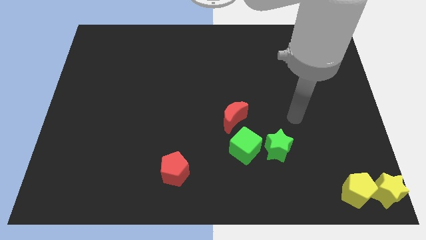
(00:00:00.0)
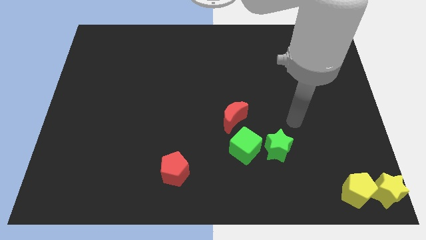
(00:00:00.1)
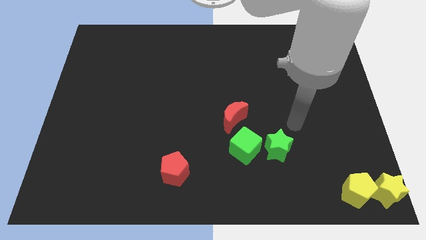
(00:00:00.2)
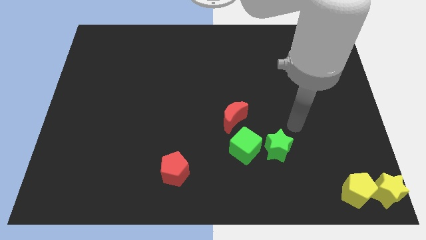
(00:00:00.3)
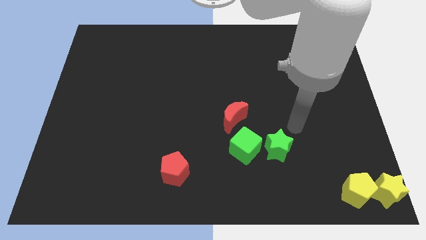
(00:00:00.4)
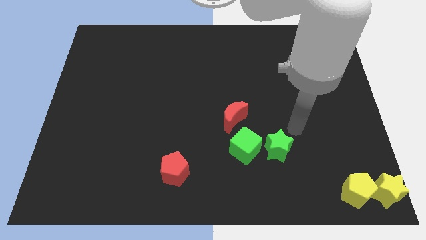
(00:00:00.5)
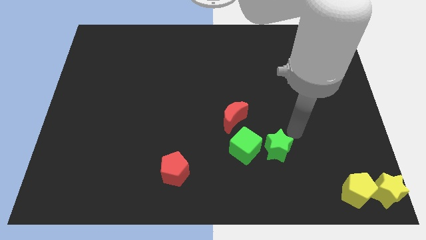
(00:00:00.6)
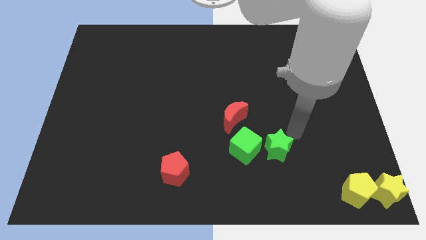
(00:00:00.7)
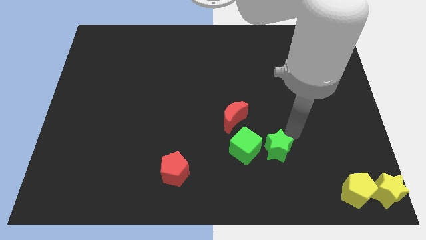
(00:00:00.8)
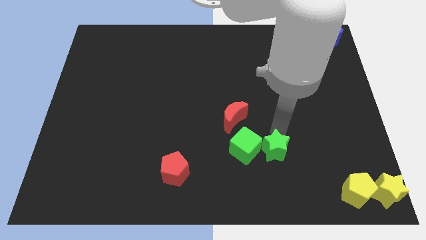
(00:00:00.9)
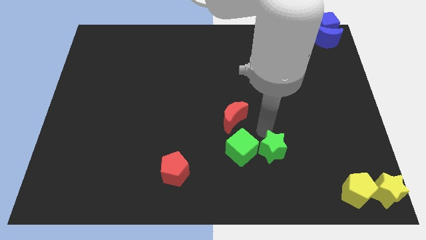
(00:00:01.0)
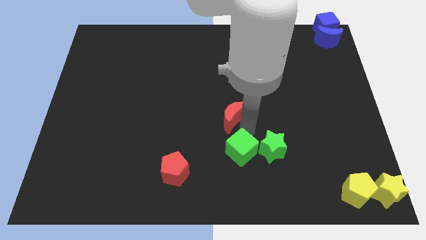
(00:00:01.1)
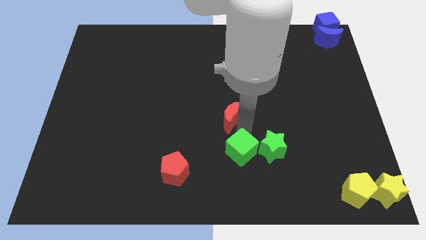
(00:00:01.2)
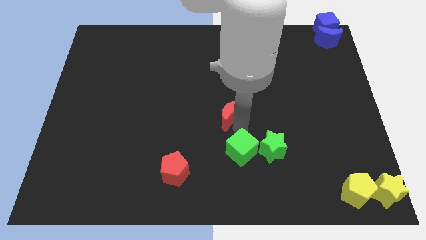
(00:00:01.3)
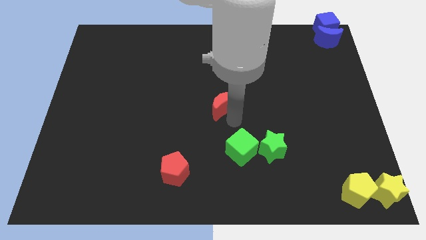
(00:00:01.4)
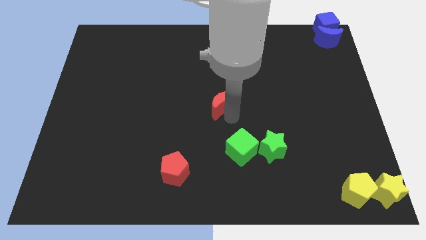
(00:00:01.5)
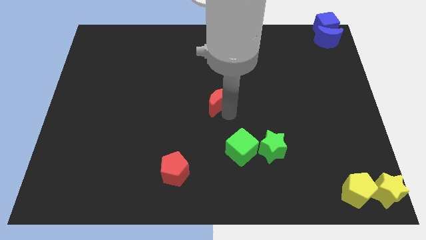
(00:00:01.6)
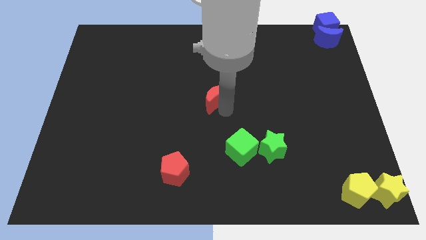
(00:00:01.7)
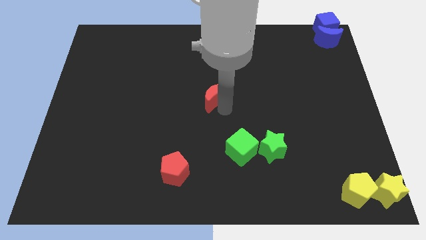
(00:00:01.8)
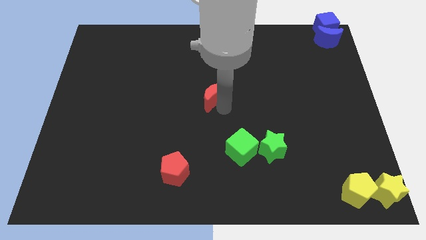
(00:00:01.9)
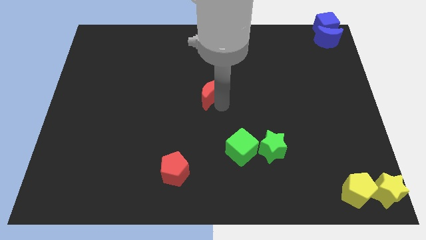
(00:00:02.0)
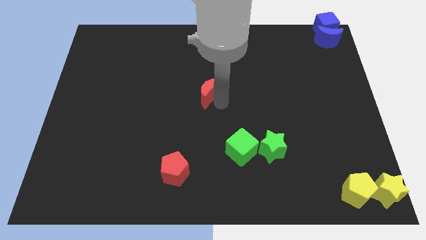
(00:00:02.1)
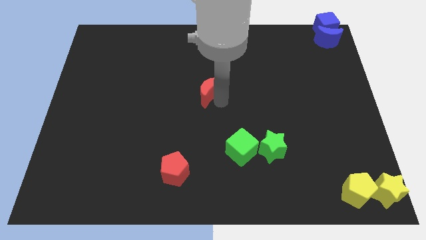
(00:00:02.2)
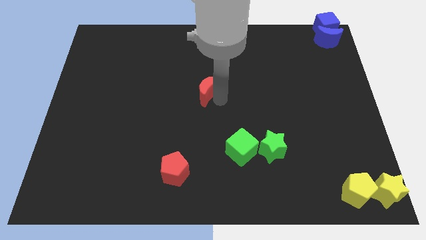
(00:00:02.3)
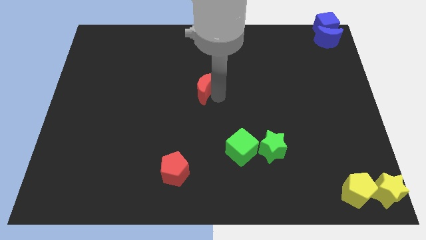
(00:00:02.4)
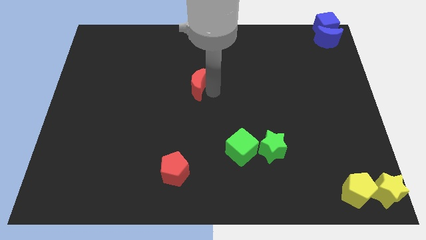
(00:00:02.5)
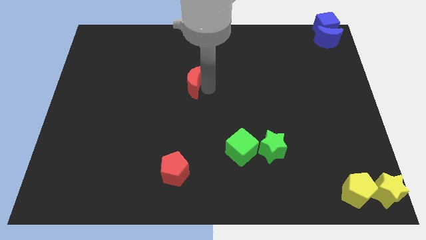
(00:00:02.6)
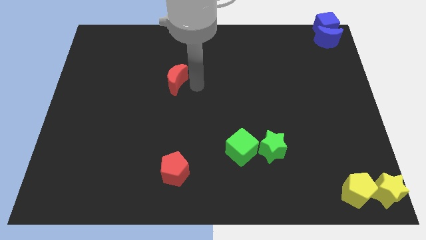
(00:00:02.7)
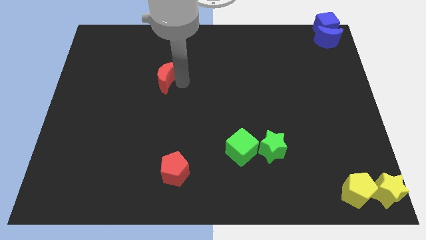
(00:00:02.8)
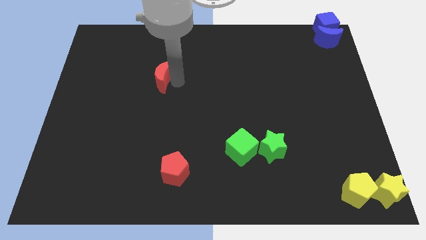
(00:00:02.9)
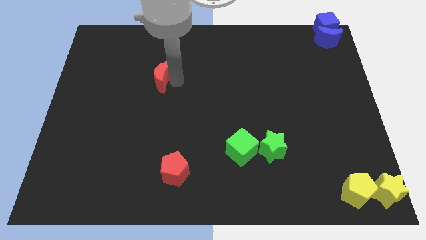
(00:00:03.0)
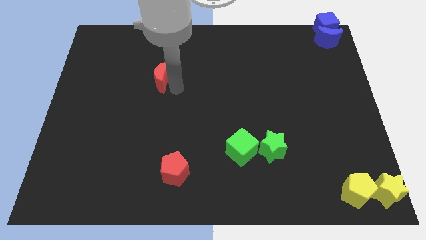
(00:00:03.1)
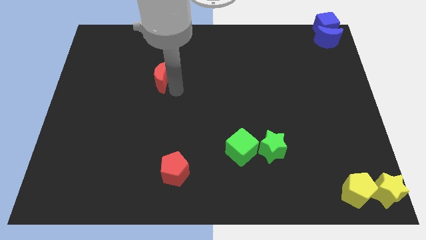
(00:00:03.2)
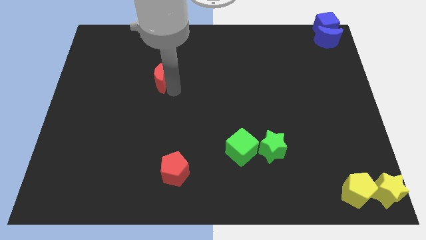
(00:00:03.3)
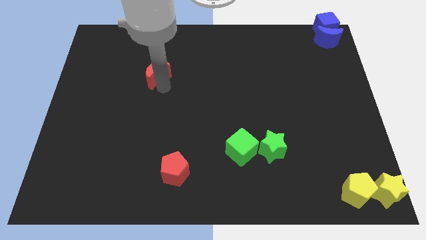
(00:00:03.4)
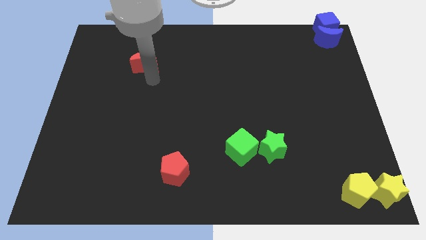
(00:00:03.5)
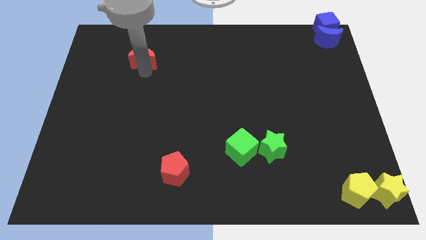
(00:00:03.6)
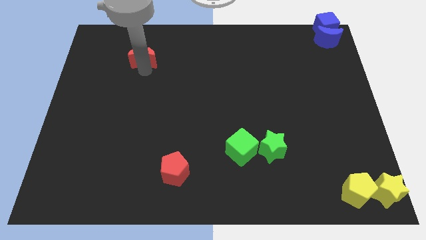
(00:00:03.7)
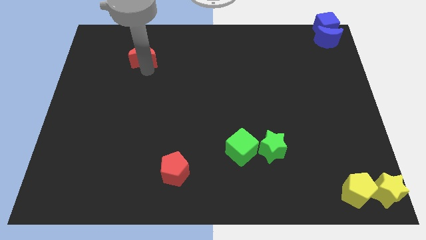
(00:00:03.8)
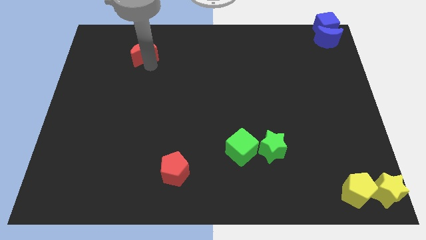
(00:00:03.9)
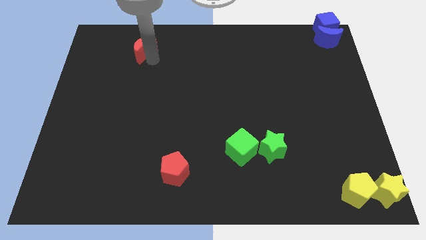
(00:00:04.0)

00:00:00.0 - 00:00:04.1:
move the red crescent slightly towards the top of the board

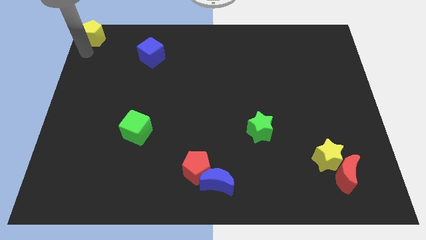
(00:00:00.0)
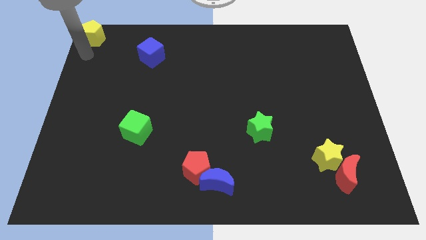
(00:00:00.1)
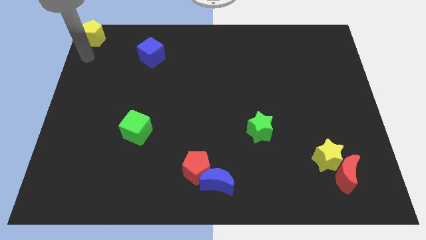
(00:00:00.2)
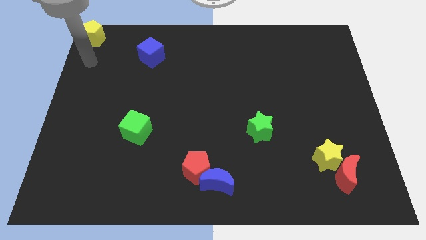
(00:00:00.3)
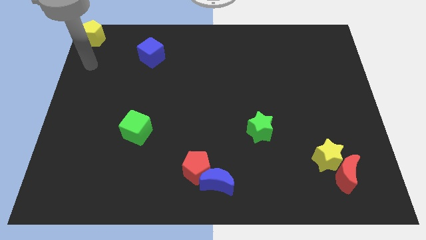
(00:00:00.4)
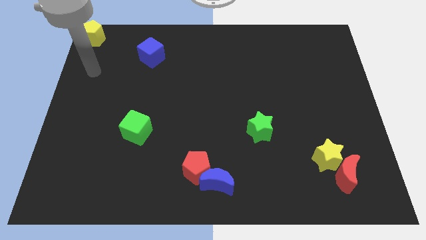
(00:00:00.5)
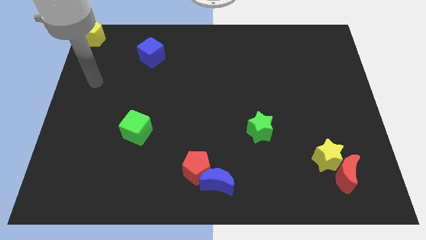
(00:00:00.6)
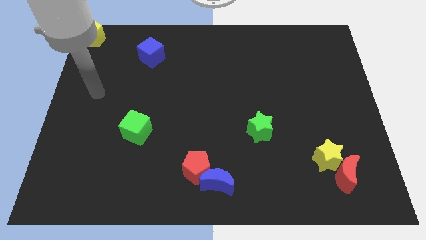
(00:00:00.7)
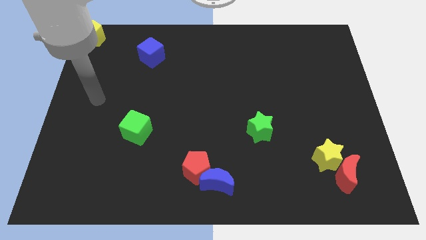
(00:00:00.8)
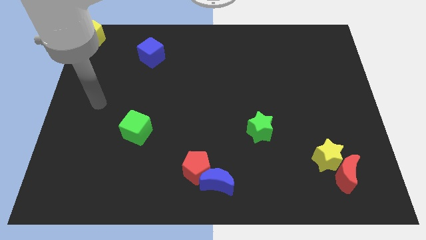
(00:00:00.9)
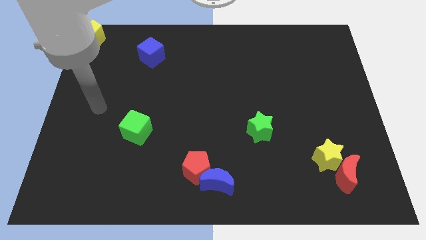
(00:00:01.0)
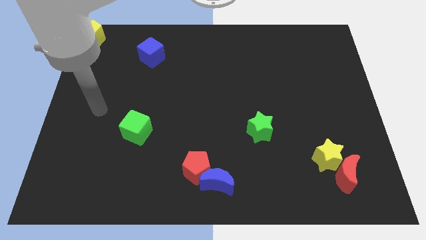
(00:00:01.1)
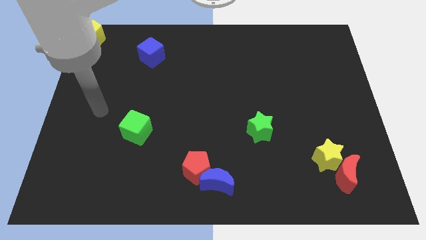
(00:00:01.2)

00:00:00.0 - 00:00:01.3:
move your arm away from yellow pentagon

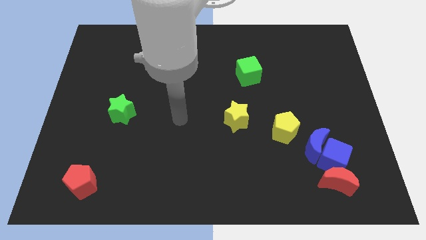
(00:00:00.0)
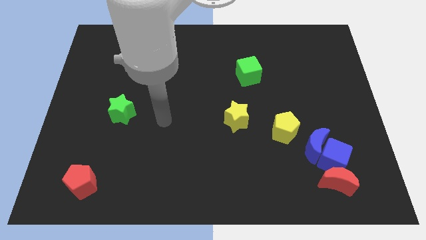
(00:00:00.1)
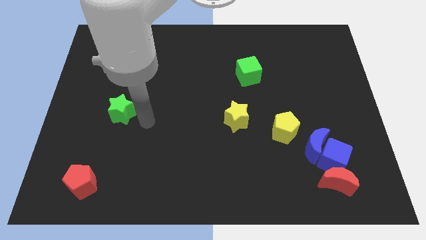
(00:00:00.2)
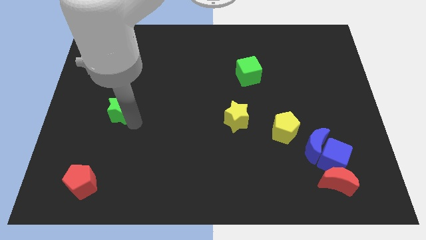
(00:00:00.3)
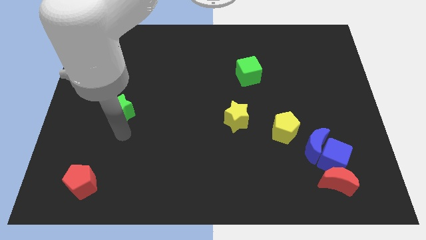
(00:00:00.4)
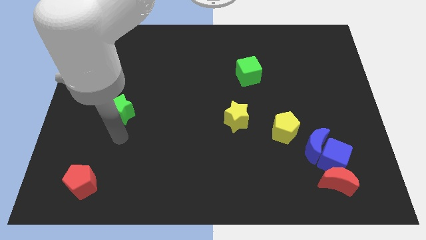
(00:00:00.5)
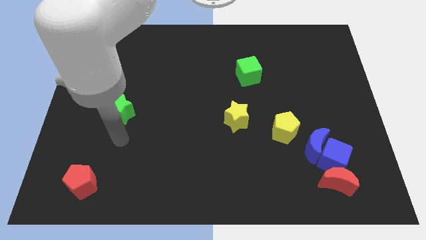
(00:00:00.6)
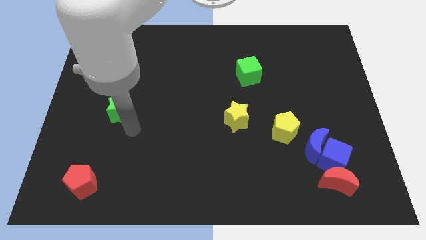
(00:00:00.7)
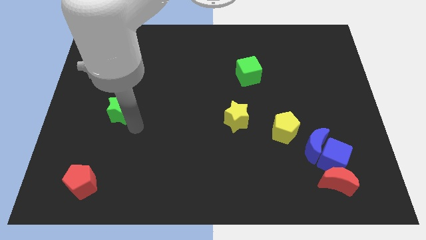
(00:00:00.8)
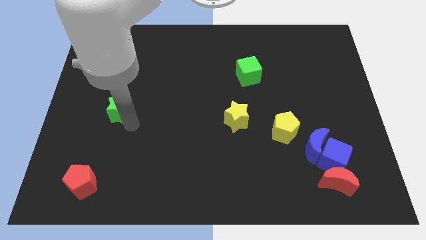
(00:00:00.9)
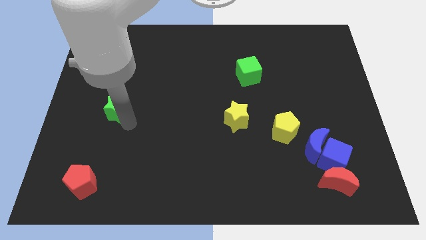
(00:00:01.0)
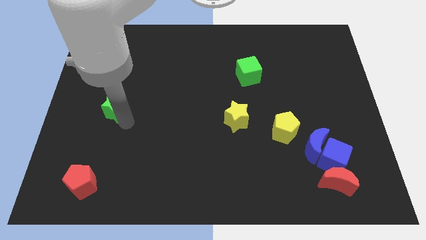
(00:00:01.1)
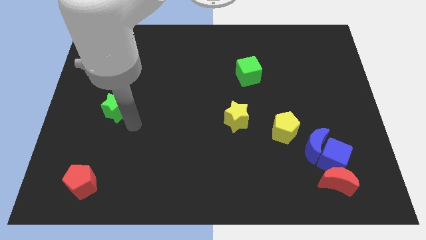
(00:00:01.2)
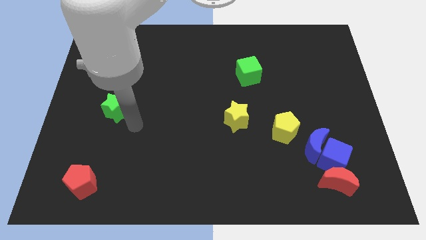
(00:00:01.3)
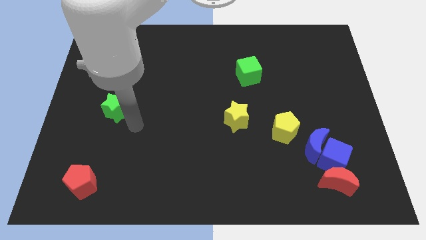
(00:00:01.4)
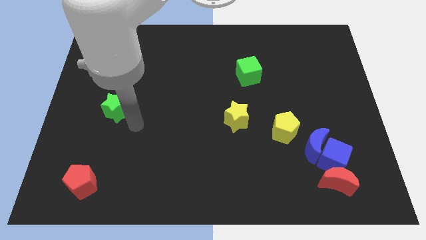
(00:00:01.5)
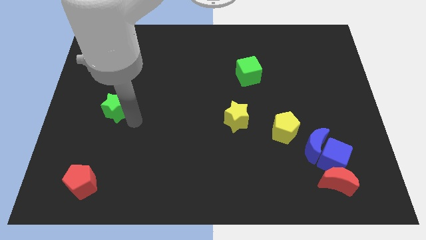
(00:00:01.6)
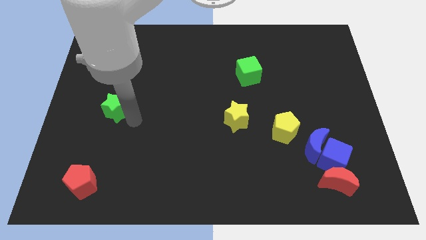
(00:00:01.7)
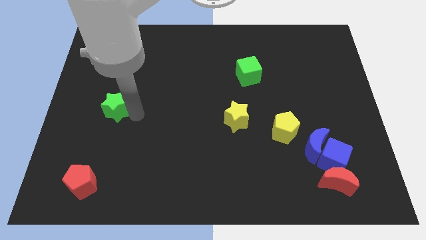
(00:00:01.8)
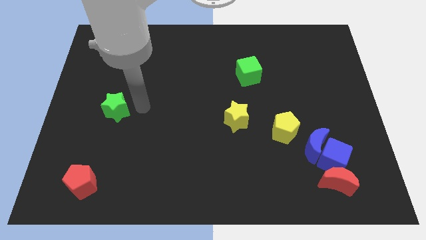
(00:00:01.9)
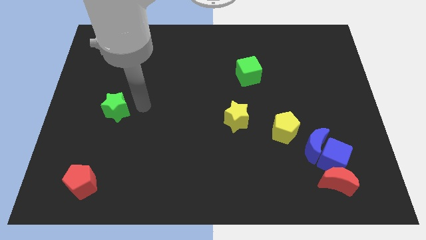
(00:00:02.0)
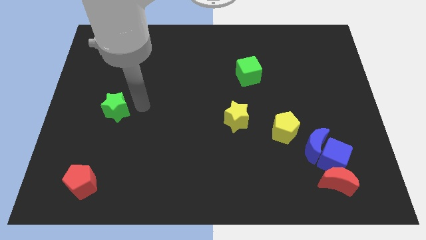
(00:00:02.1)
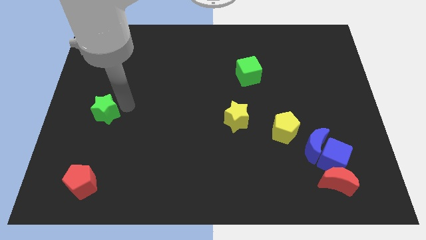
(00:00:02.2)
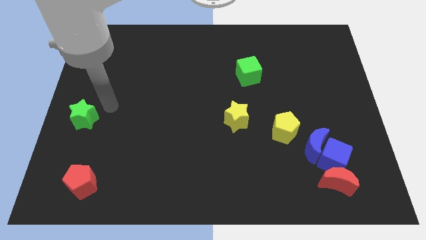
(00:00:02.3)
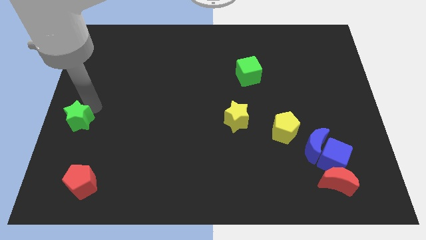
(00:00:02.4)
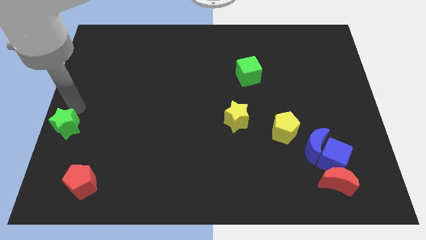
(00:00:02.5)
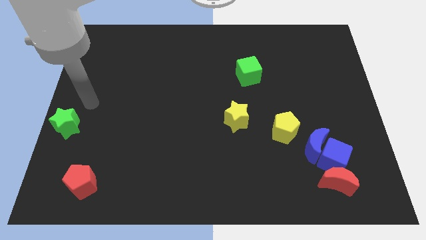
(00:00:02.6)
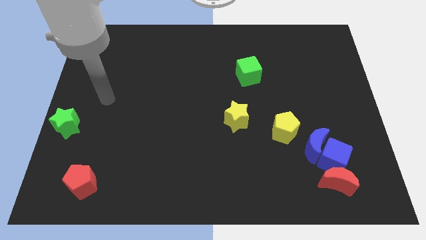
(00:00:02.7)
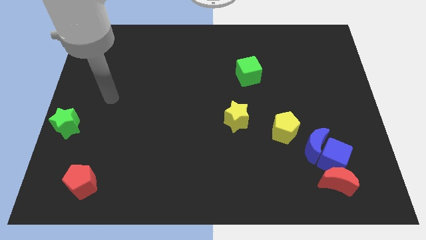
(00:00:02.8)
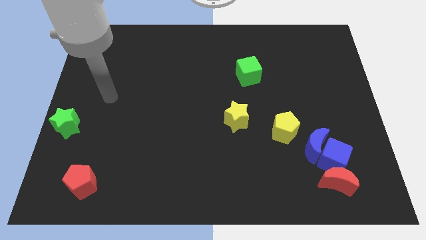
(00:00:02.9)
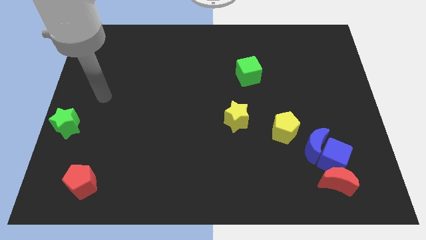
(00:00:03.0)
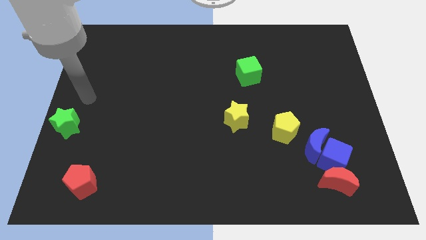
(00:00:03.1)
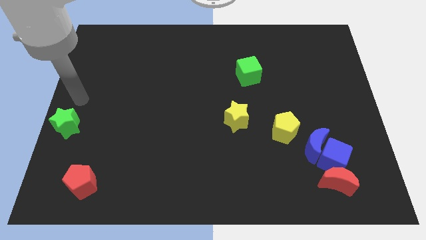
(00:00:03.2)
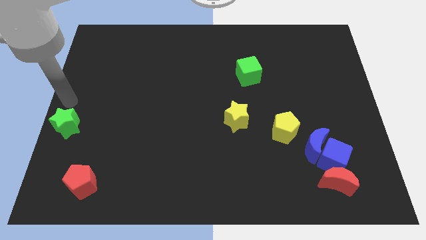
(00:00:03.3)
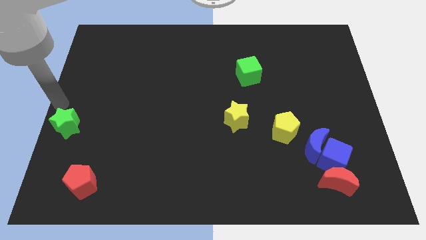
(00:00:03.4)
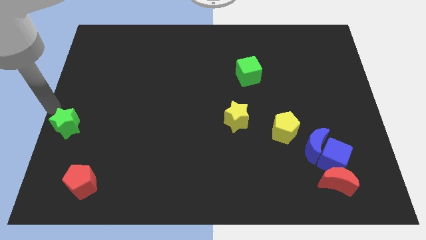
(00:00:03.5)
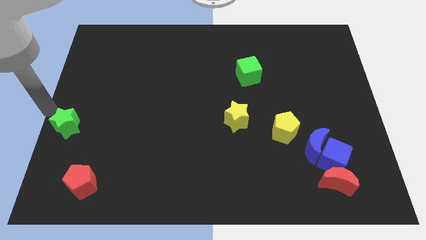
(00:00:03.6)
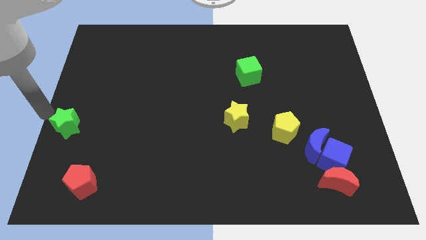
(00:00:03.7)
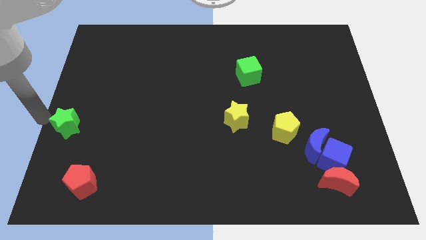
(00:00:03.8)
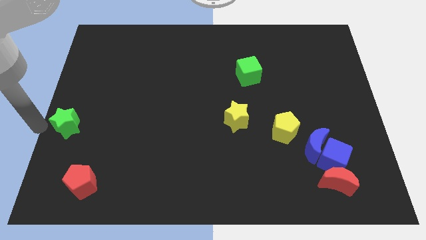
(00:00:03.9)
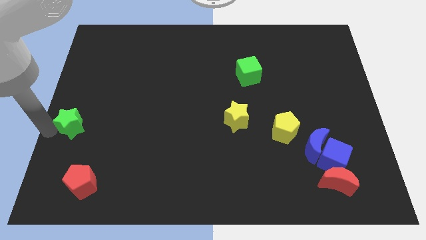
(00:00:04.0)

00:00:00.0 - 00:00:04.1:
place green star to the top left of red pentagon
